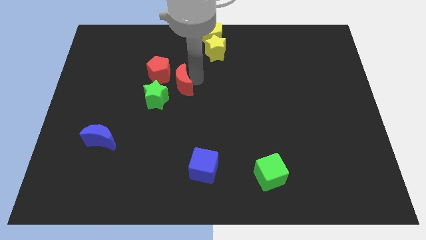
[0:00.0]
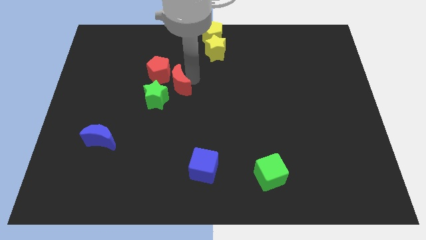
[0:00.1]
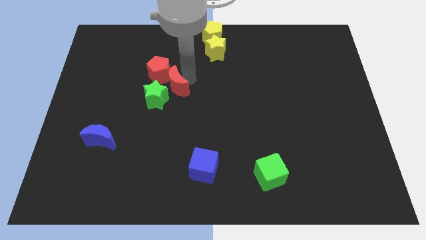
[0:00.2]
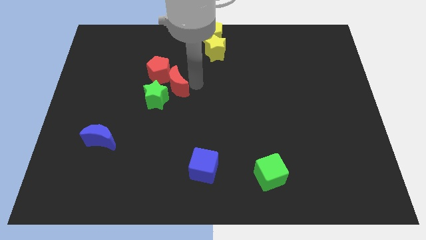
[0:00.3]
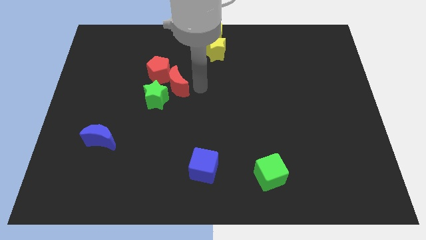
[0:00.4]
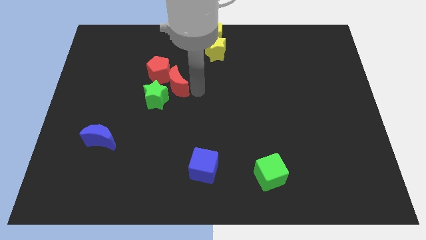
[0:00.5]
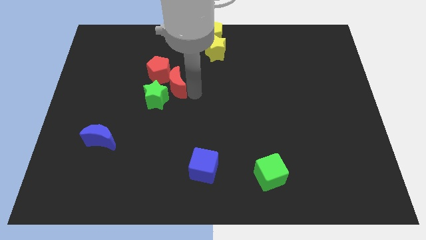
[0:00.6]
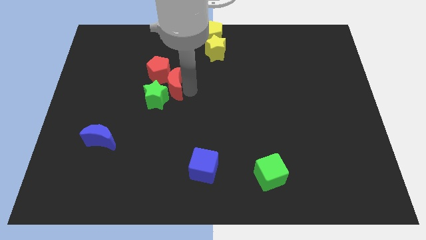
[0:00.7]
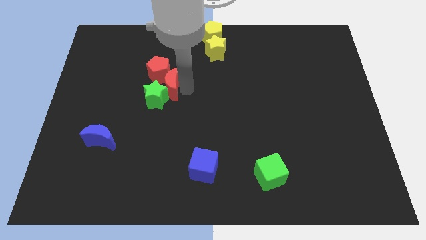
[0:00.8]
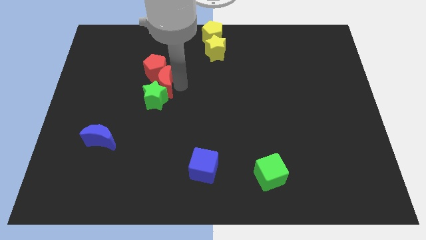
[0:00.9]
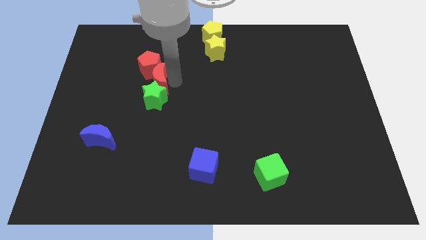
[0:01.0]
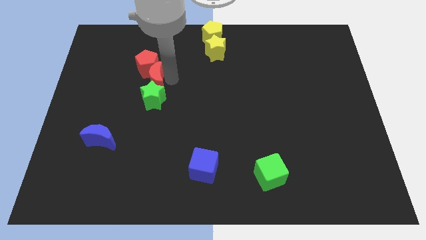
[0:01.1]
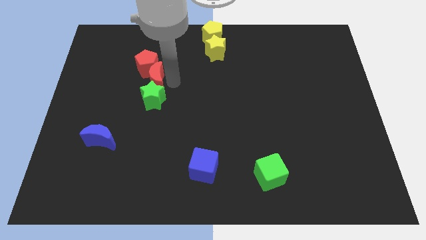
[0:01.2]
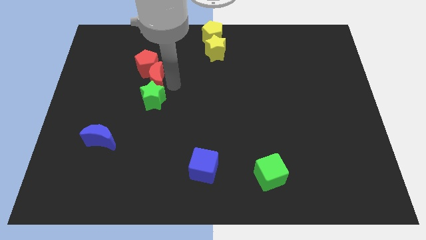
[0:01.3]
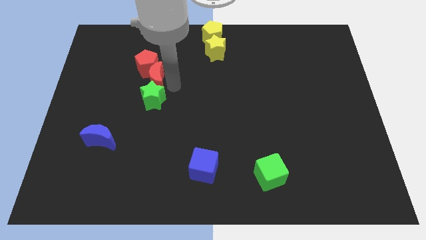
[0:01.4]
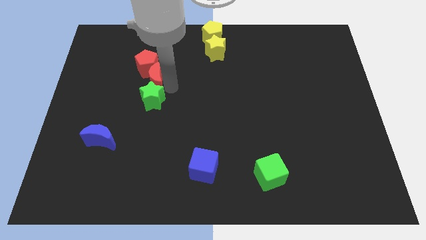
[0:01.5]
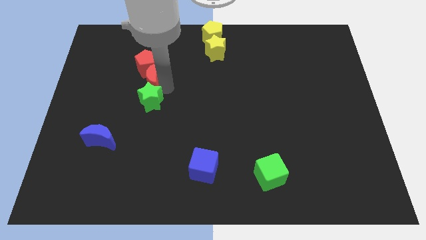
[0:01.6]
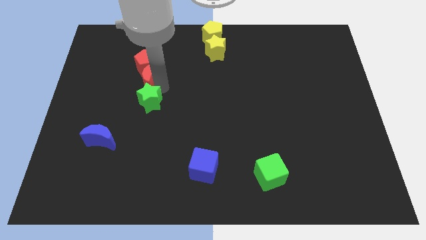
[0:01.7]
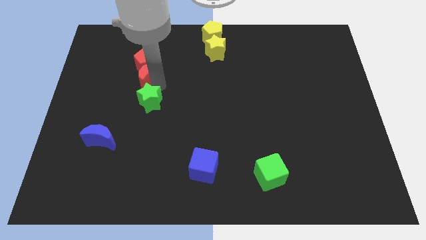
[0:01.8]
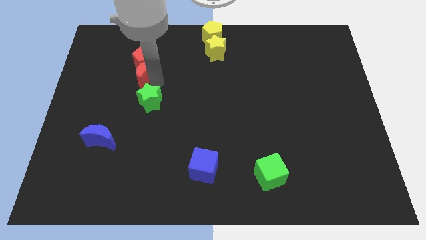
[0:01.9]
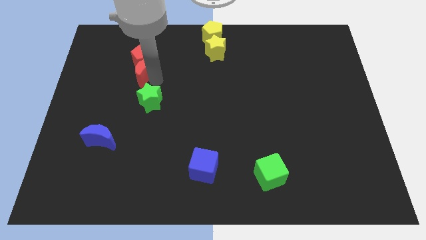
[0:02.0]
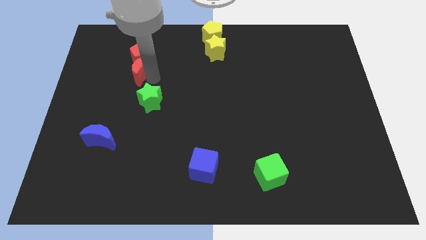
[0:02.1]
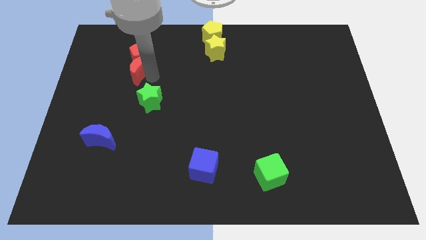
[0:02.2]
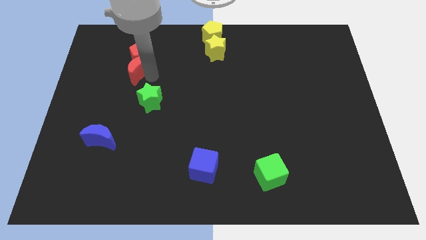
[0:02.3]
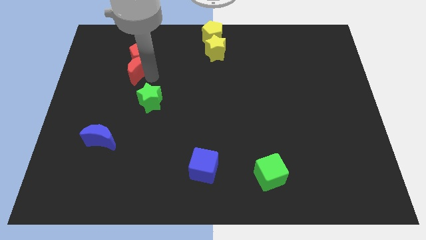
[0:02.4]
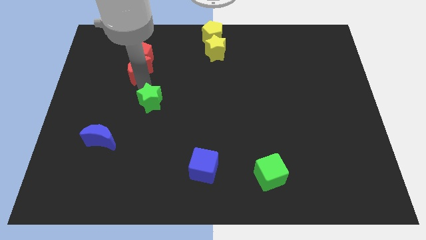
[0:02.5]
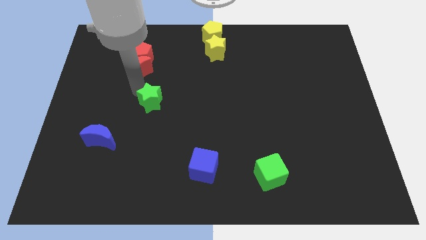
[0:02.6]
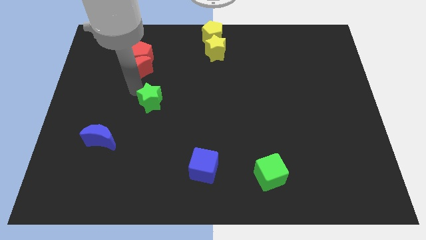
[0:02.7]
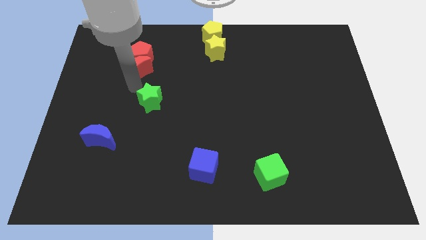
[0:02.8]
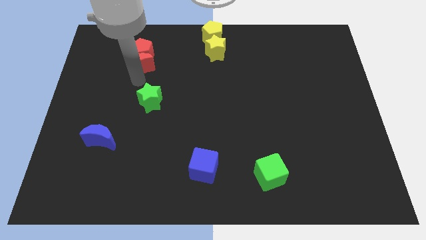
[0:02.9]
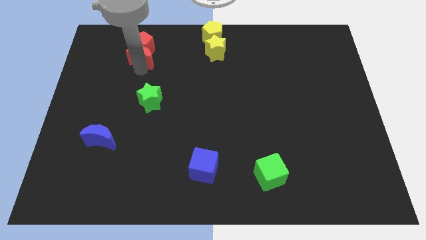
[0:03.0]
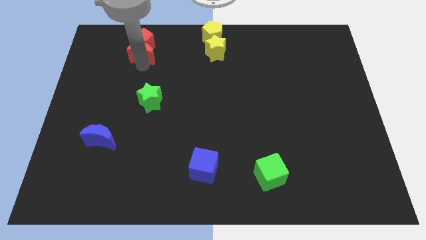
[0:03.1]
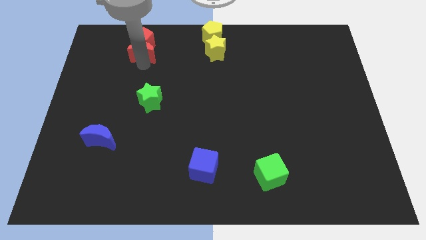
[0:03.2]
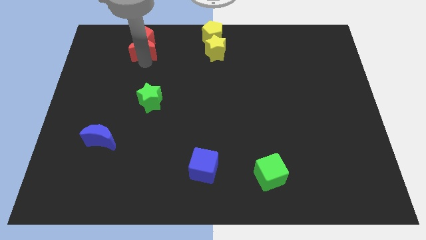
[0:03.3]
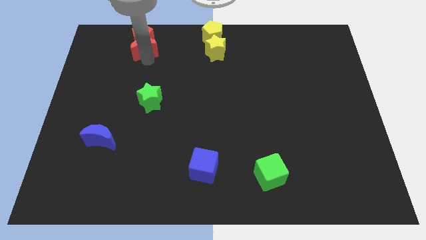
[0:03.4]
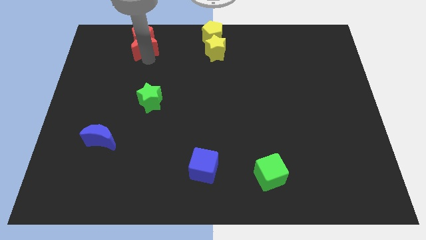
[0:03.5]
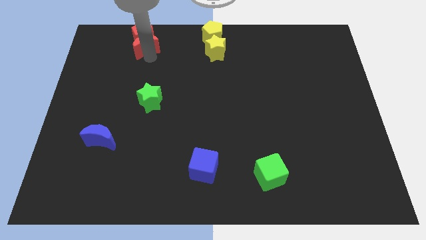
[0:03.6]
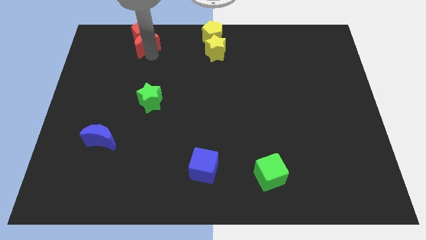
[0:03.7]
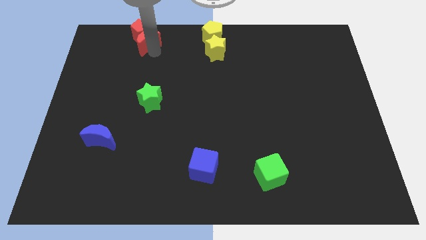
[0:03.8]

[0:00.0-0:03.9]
push the red blocks towards the top left side of the board

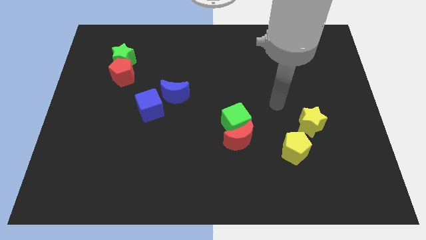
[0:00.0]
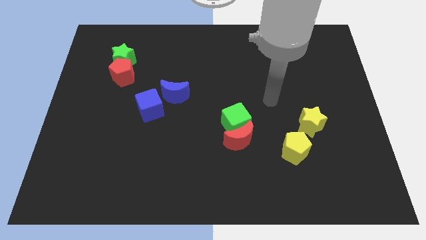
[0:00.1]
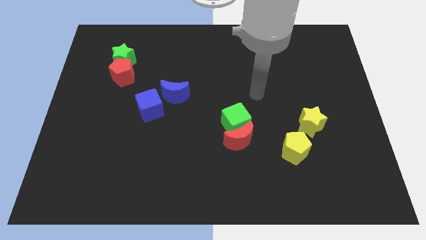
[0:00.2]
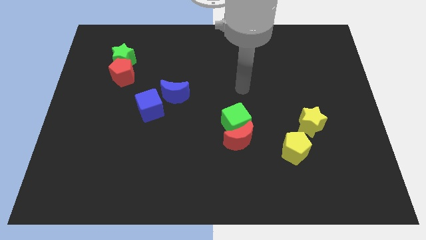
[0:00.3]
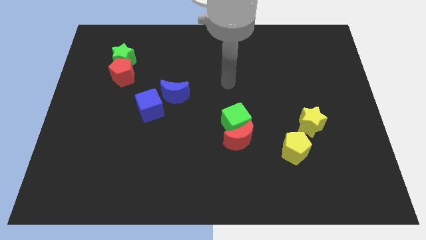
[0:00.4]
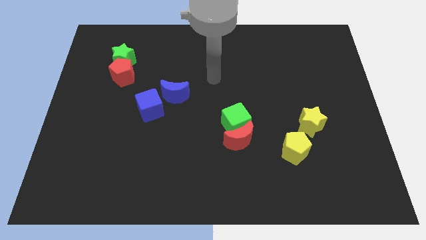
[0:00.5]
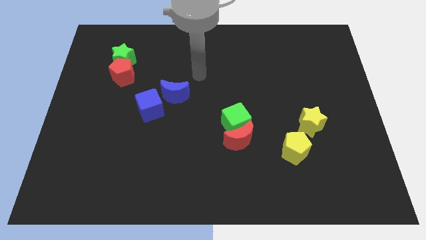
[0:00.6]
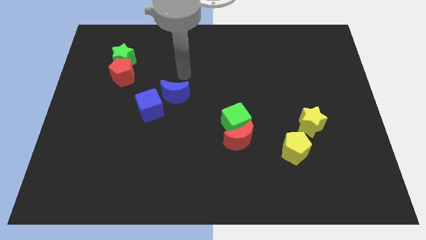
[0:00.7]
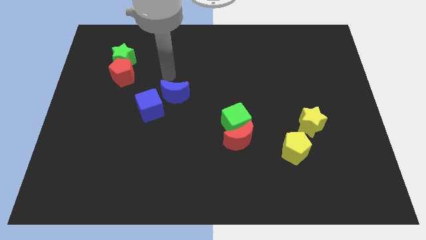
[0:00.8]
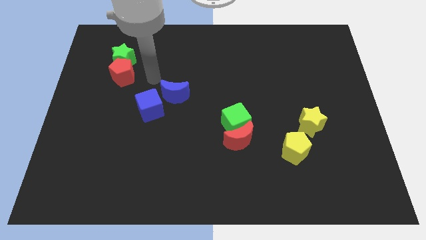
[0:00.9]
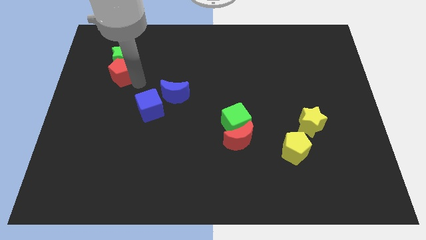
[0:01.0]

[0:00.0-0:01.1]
move the arm to the bottom right to the red pentagon

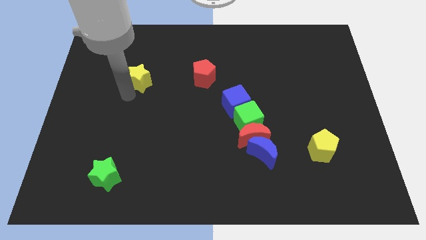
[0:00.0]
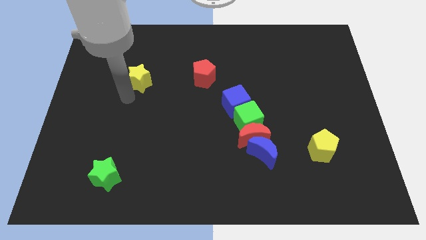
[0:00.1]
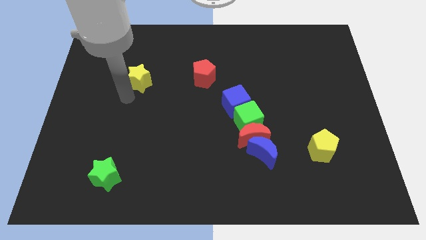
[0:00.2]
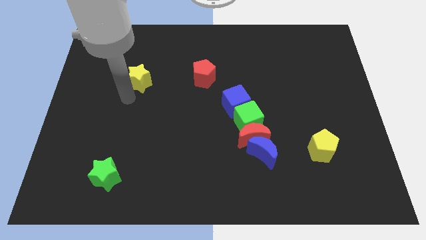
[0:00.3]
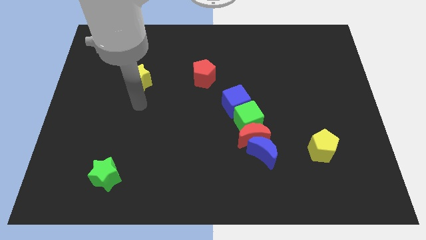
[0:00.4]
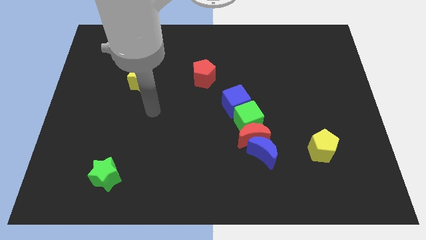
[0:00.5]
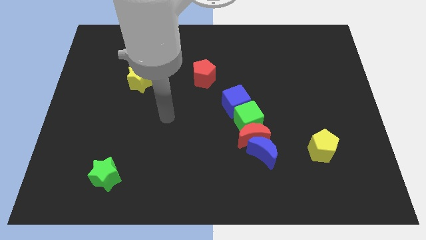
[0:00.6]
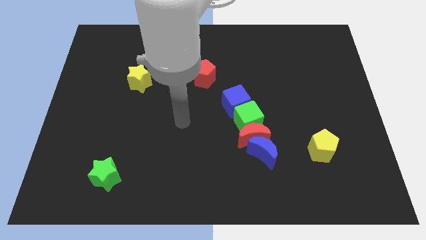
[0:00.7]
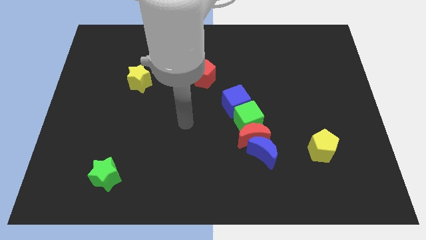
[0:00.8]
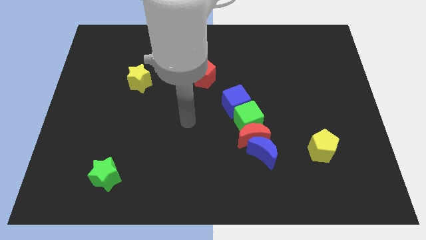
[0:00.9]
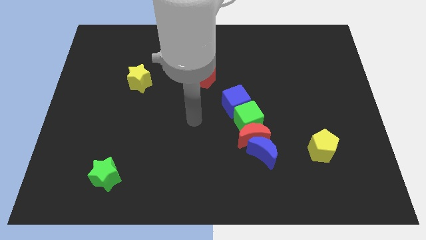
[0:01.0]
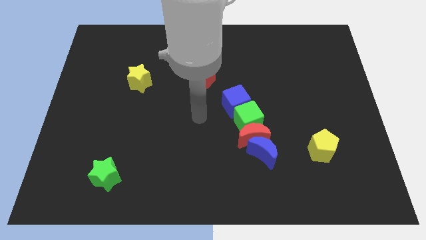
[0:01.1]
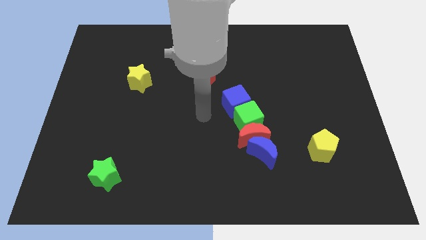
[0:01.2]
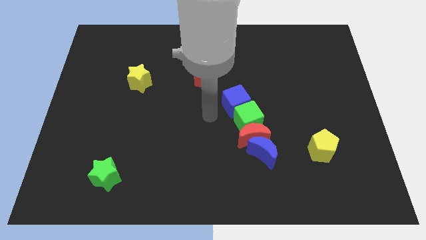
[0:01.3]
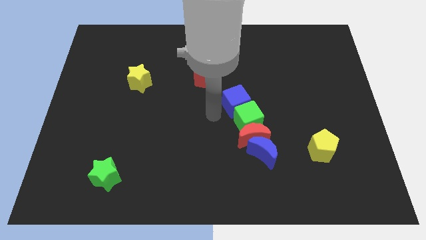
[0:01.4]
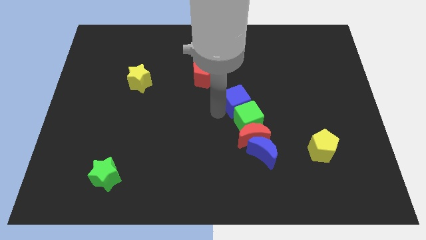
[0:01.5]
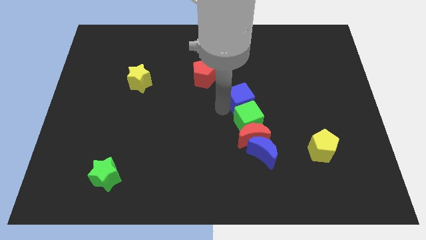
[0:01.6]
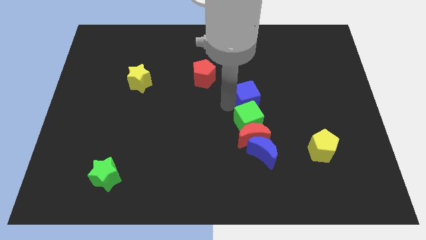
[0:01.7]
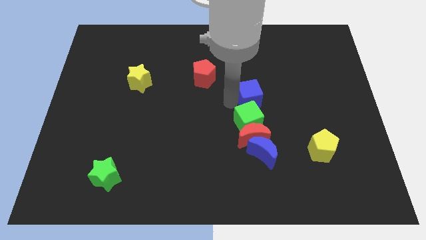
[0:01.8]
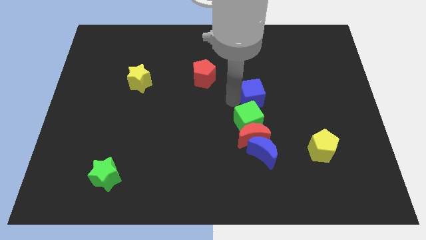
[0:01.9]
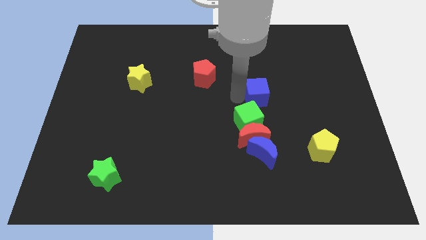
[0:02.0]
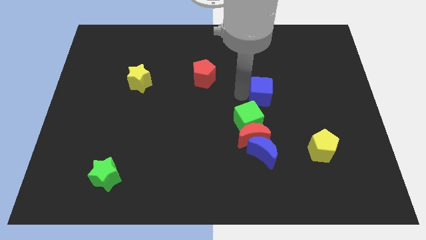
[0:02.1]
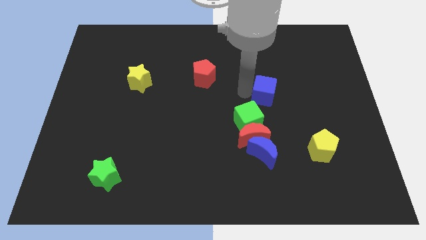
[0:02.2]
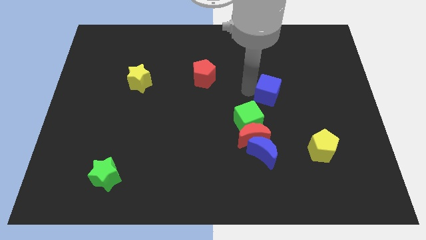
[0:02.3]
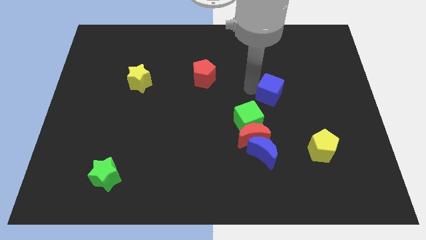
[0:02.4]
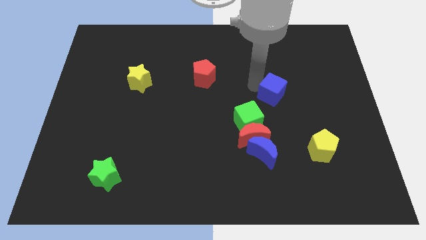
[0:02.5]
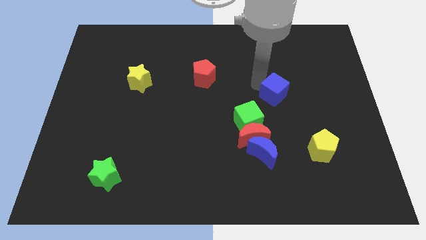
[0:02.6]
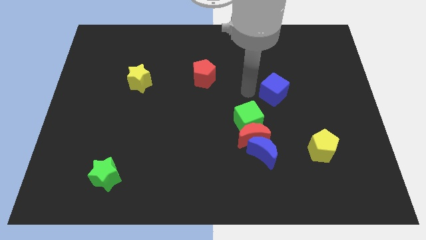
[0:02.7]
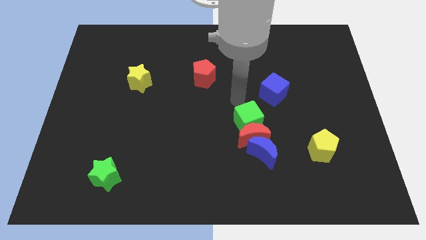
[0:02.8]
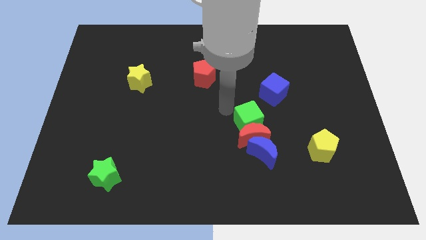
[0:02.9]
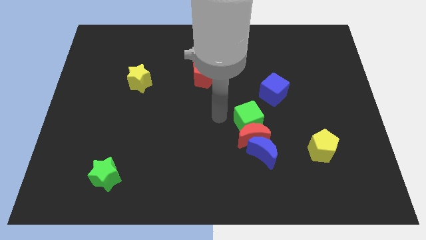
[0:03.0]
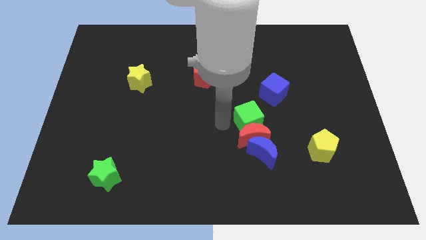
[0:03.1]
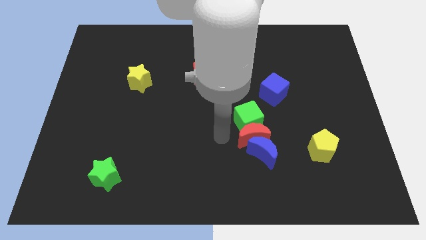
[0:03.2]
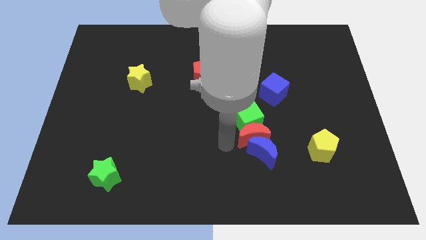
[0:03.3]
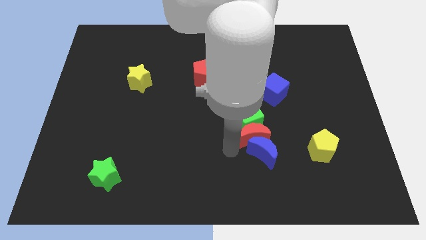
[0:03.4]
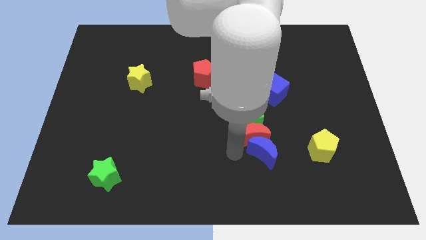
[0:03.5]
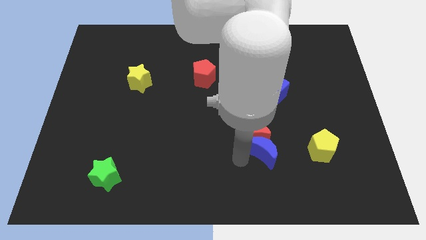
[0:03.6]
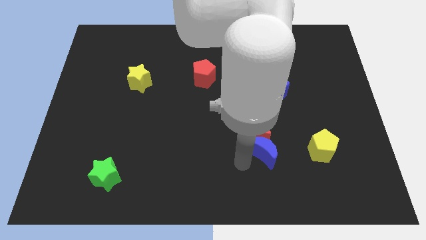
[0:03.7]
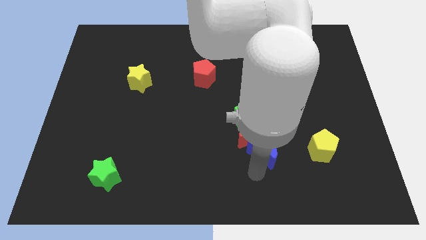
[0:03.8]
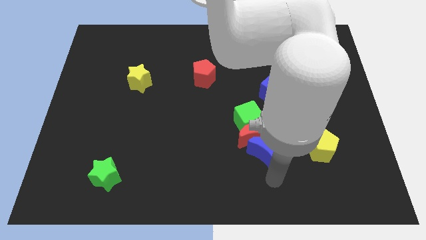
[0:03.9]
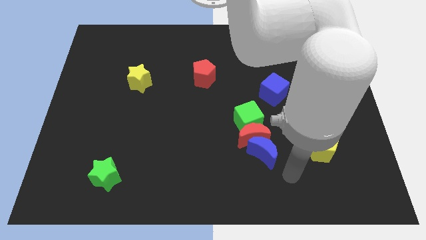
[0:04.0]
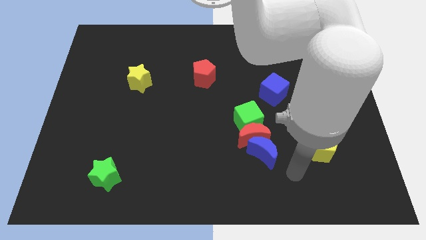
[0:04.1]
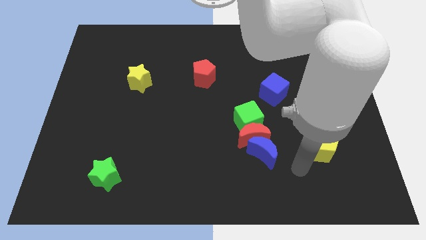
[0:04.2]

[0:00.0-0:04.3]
place the blue cube at the top of the green cube
